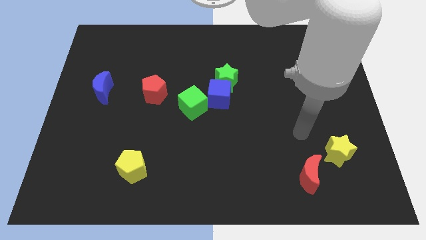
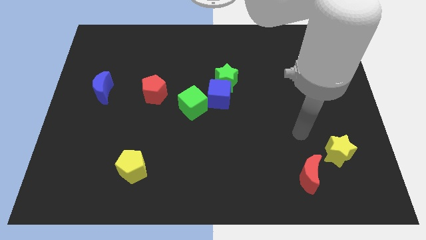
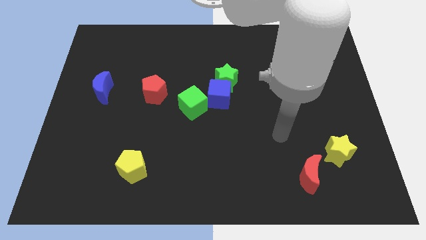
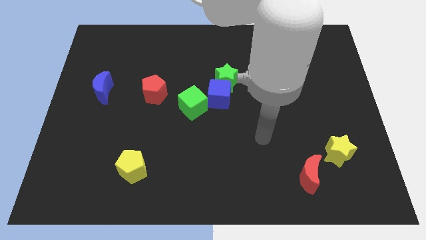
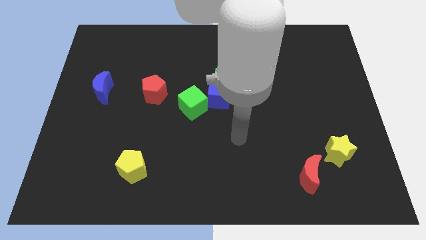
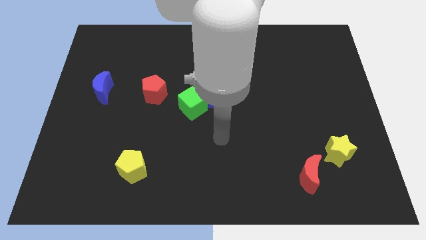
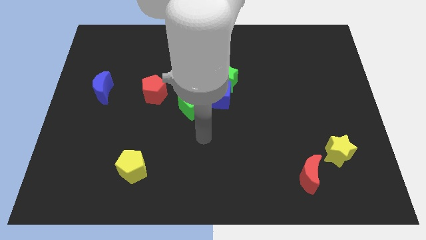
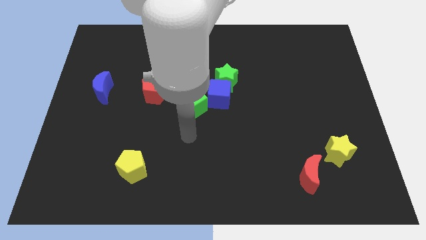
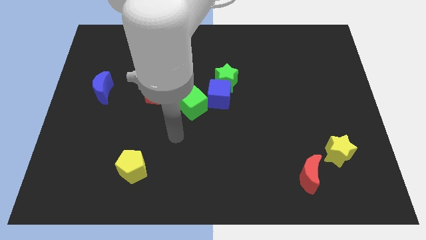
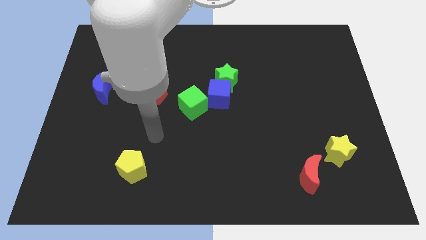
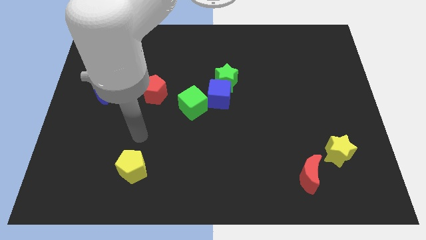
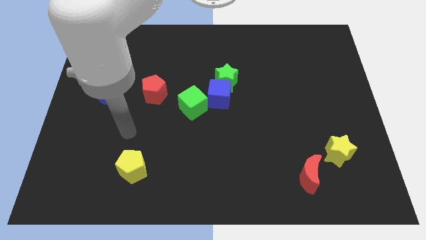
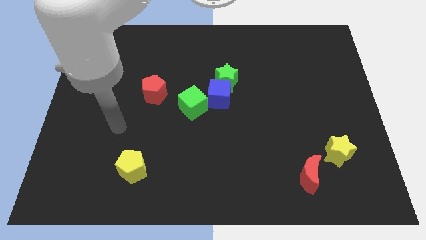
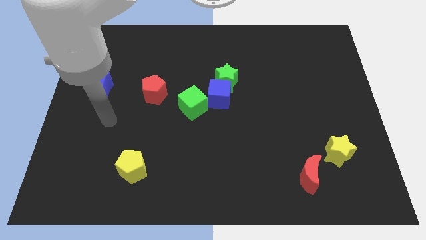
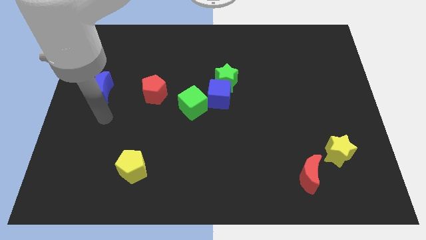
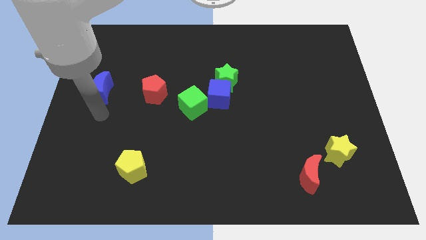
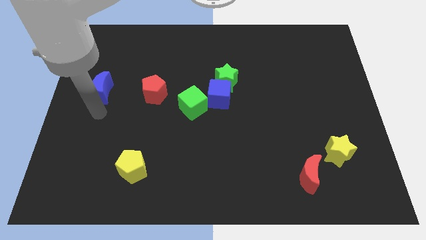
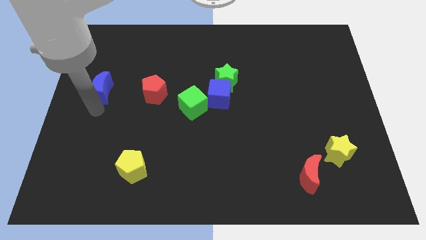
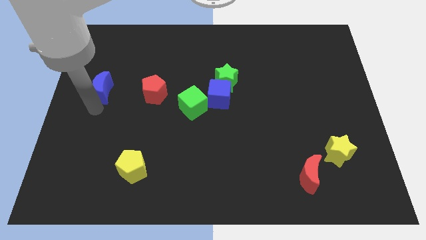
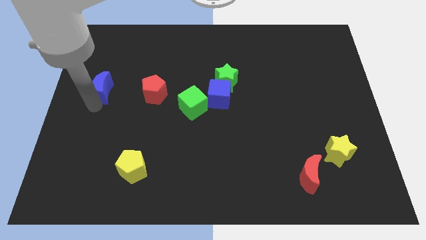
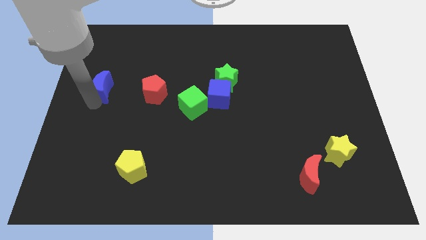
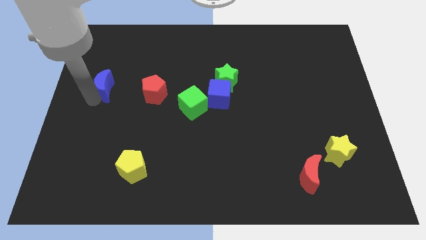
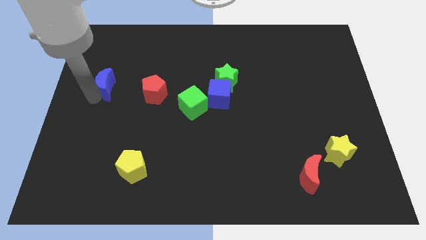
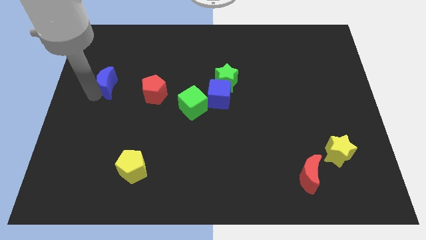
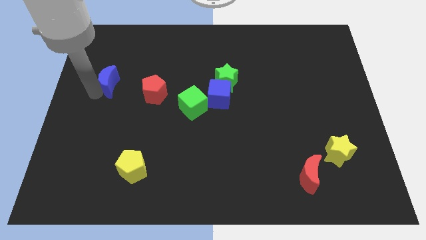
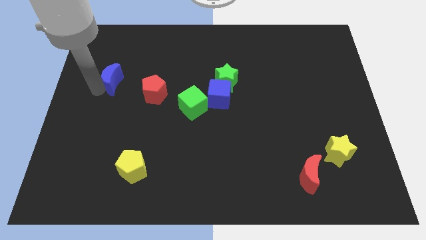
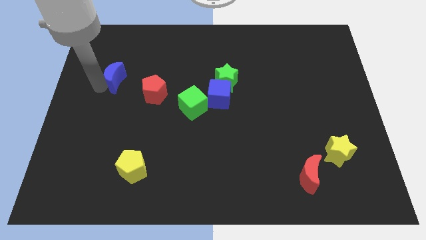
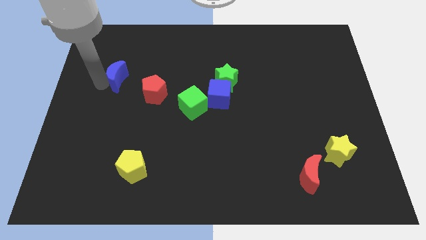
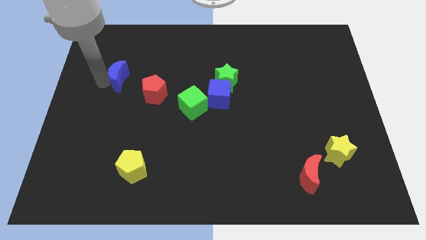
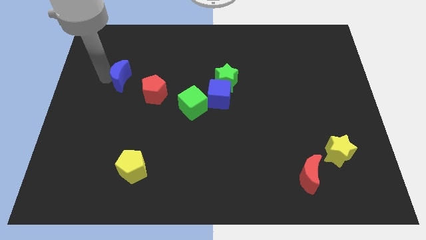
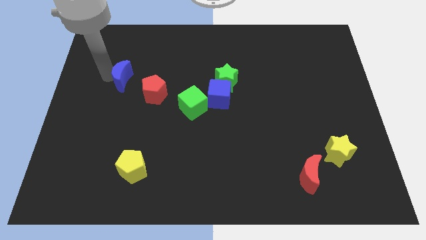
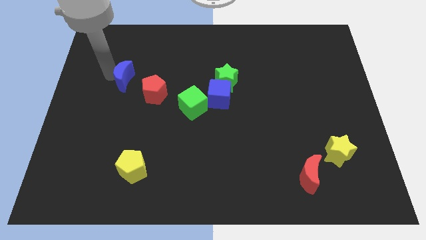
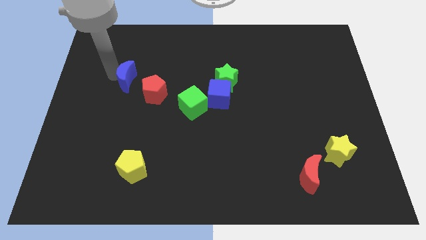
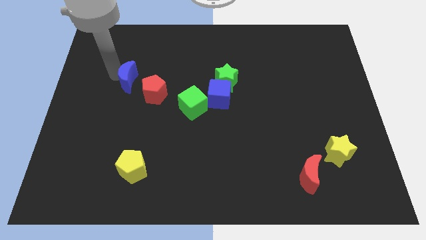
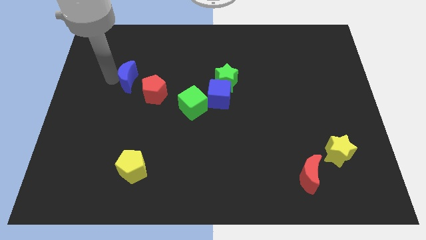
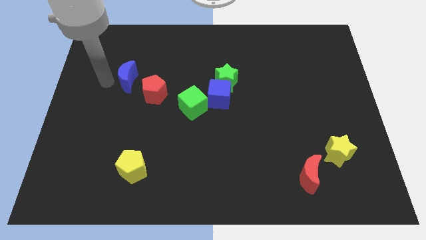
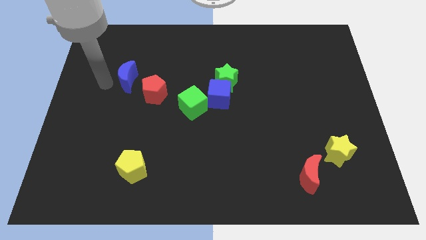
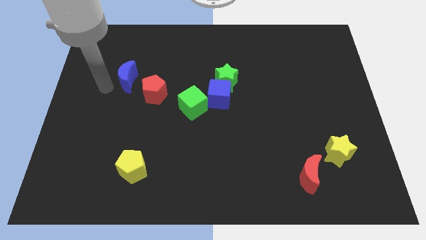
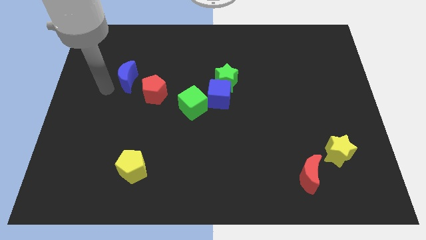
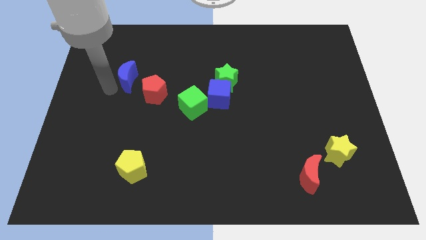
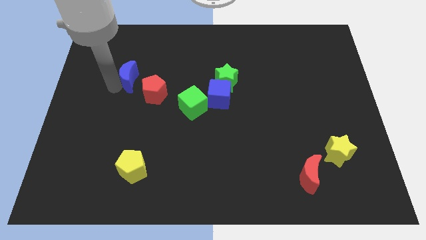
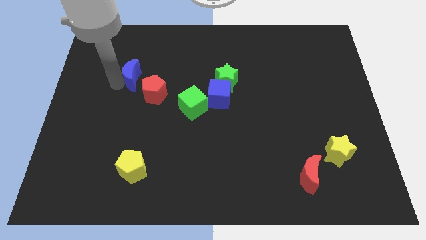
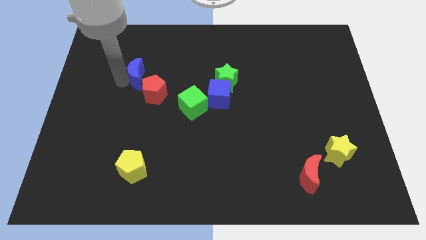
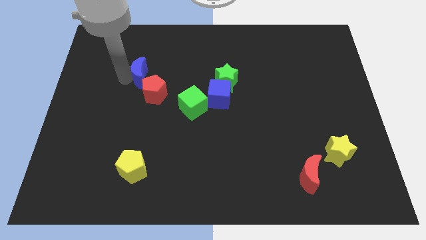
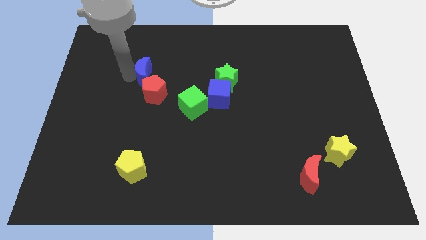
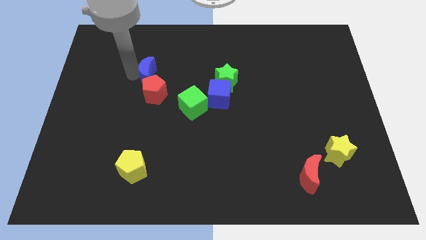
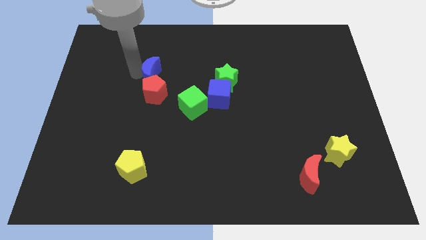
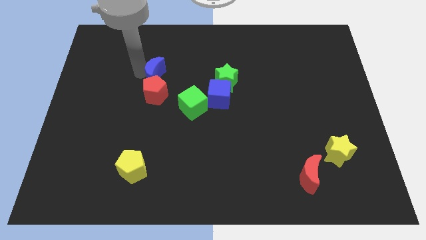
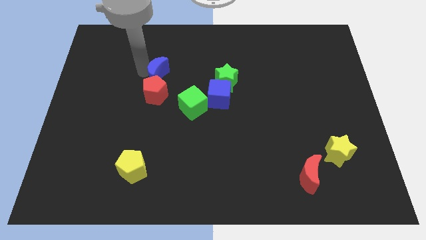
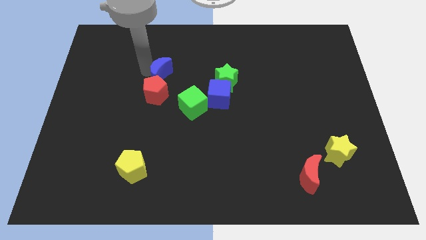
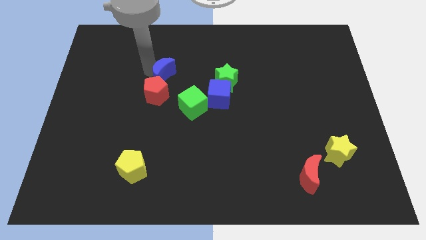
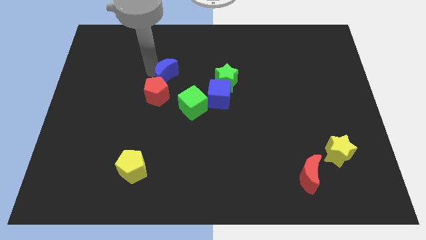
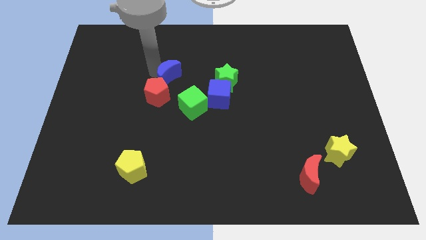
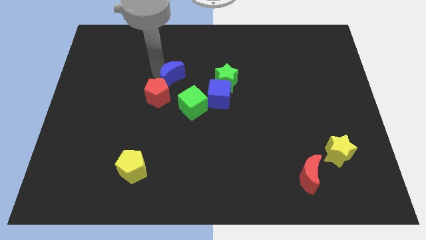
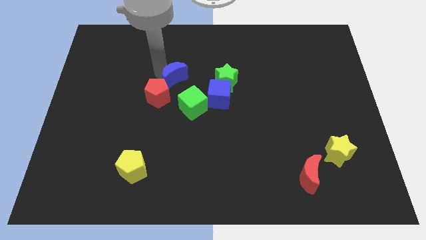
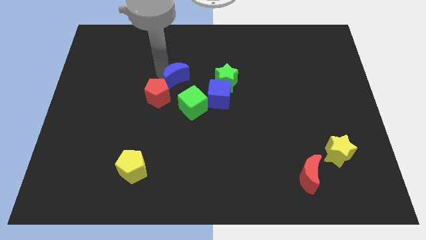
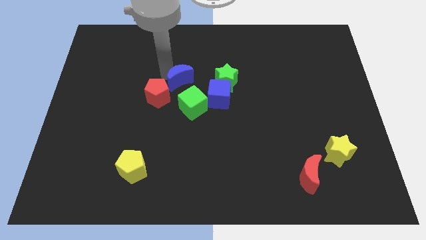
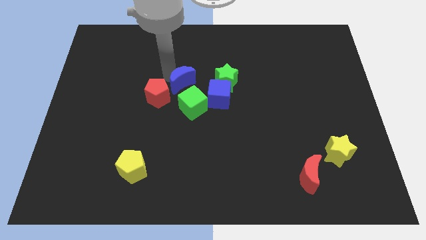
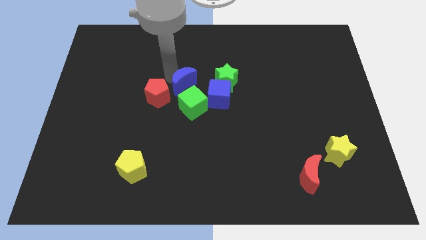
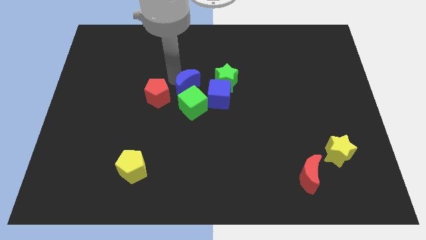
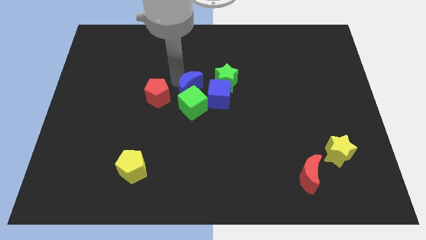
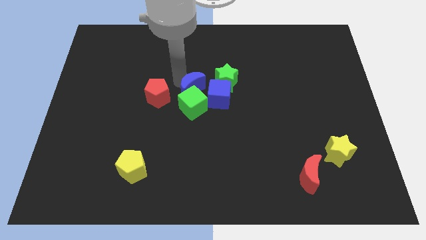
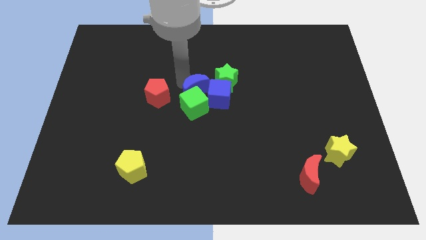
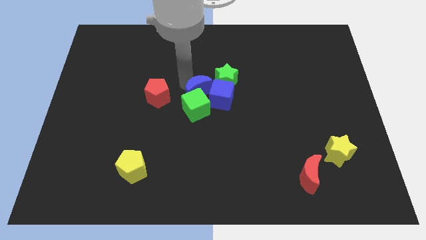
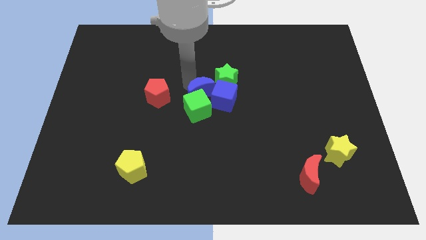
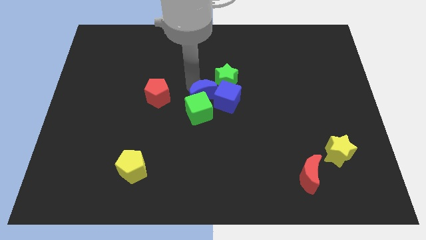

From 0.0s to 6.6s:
move the blue moon to the blue cube

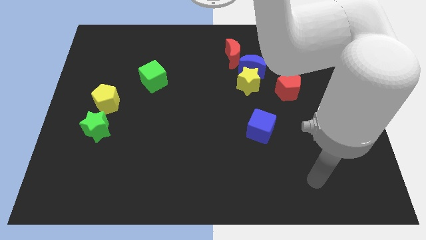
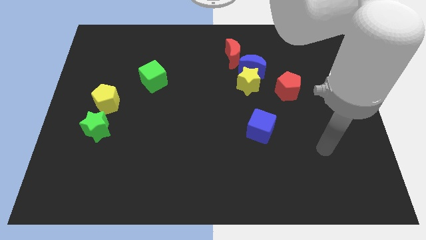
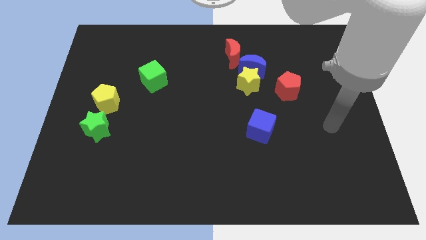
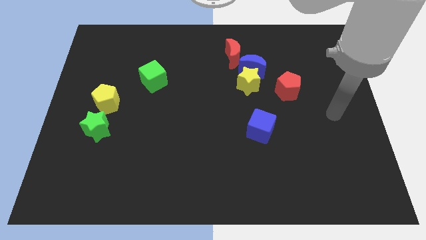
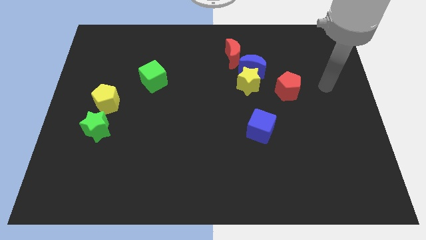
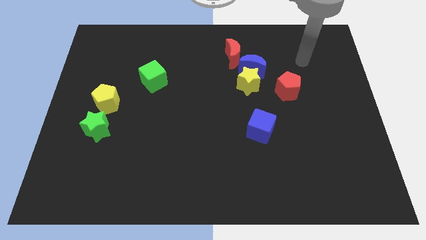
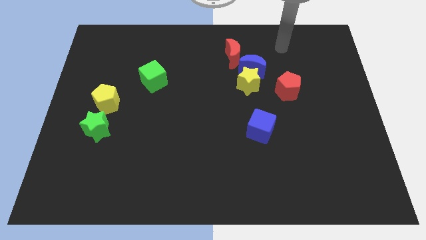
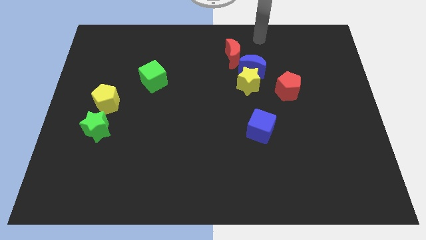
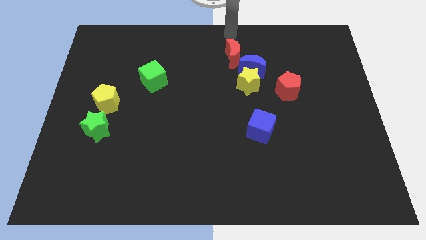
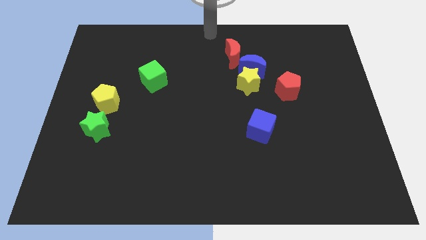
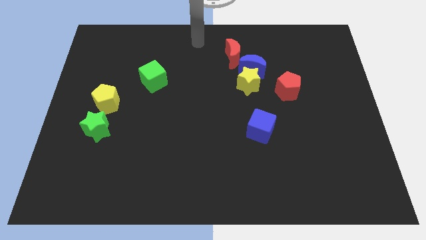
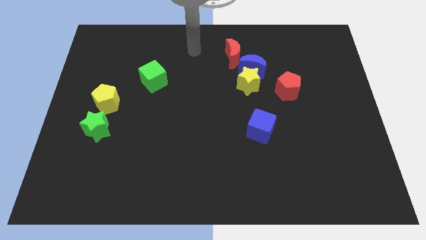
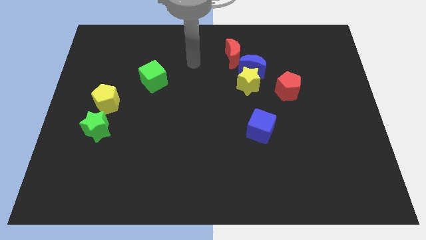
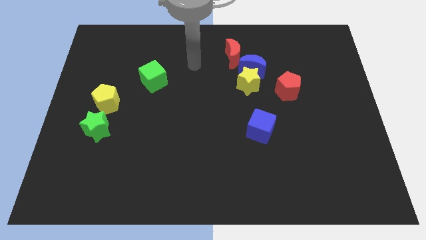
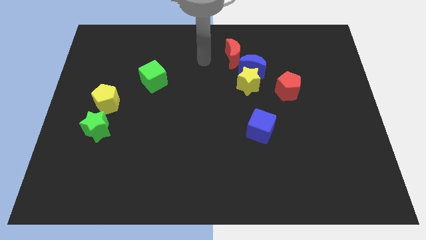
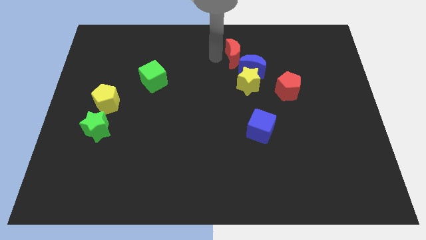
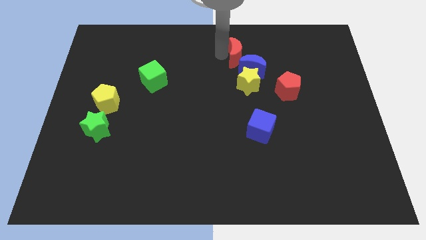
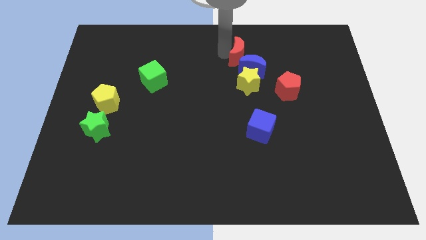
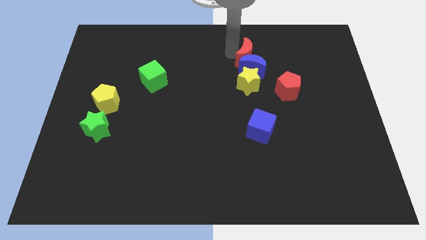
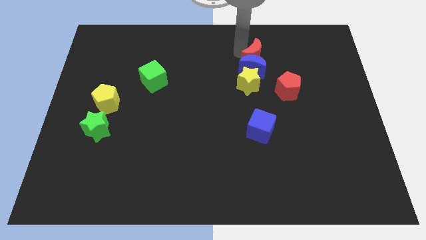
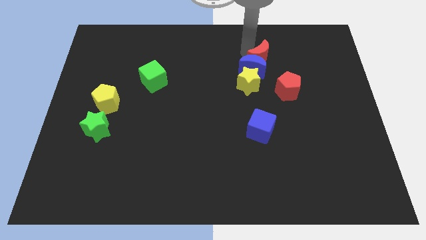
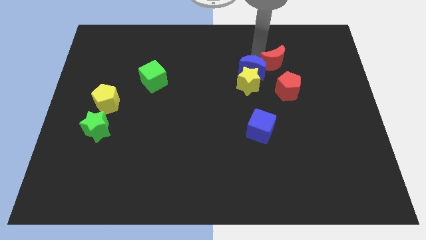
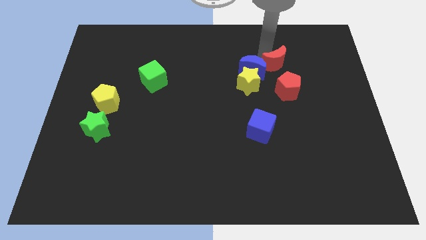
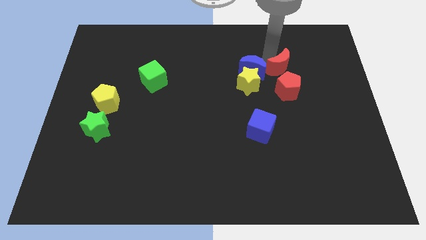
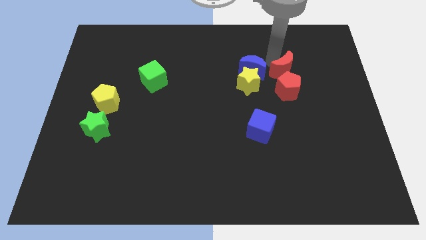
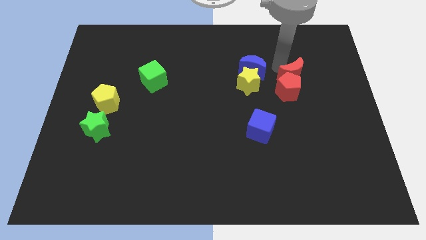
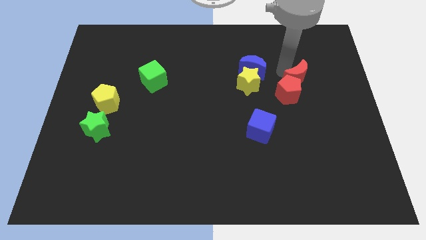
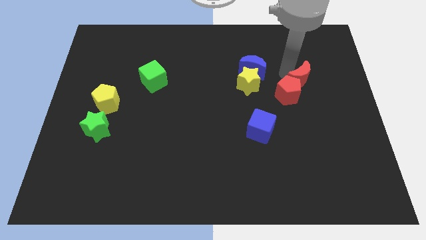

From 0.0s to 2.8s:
put the red moon close to the red pentagon
